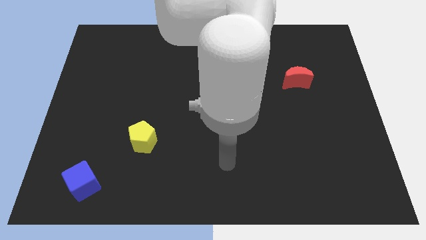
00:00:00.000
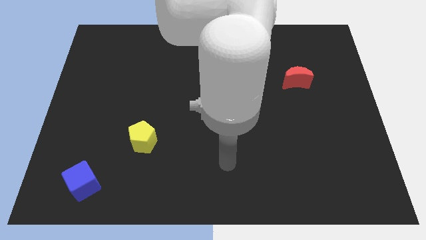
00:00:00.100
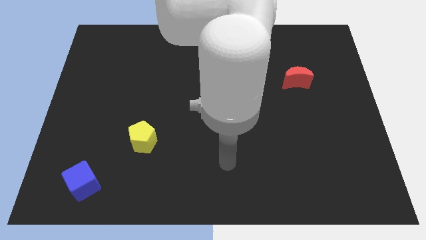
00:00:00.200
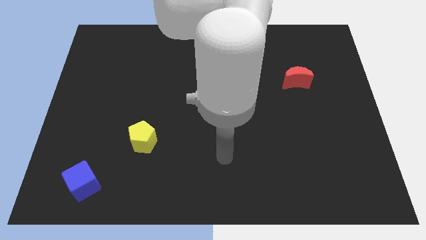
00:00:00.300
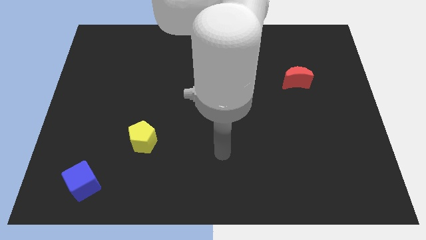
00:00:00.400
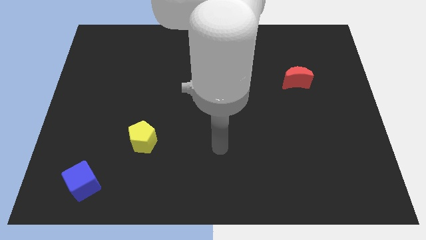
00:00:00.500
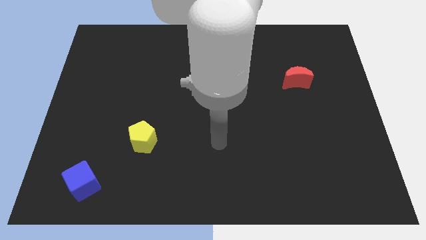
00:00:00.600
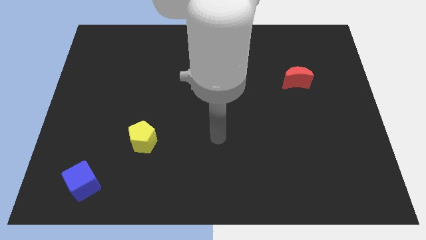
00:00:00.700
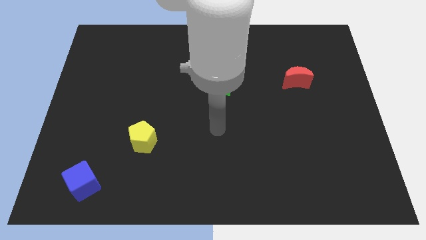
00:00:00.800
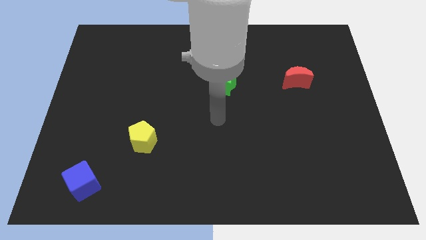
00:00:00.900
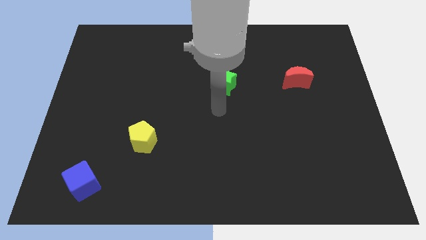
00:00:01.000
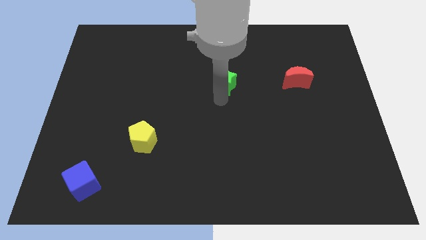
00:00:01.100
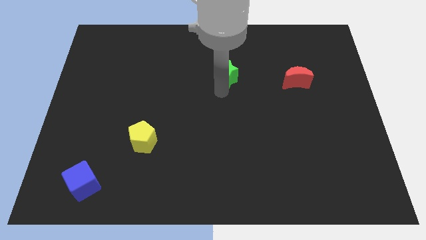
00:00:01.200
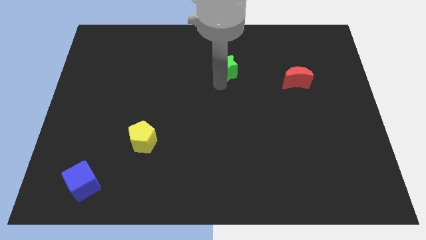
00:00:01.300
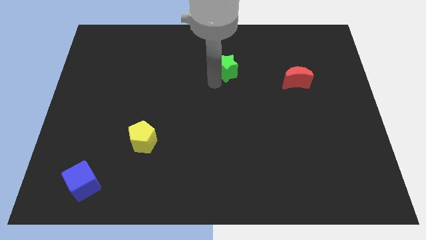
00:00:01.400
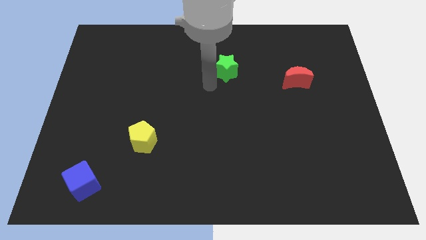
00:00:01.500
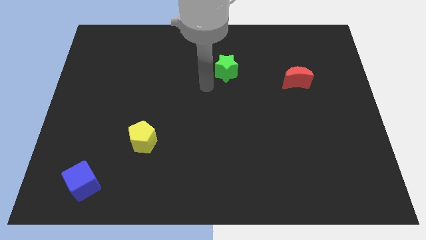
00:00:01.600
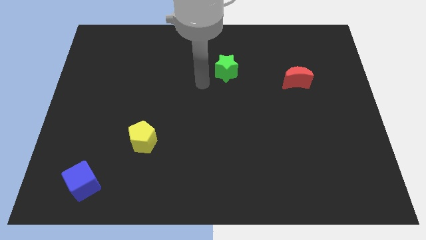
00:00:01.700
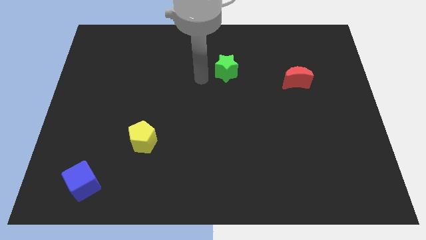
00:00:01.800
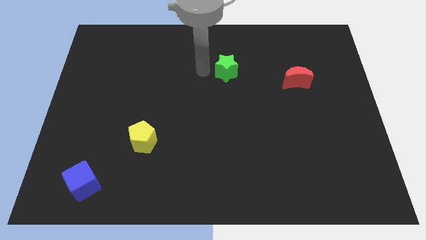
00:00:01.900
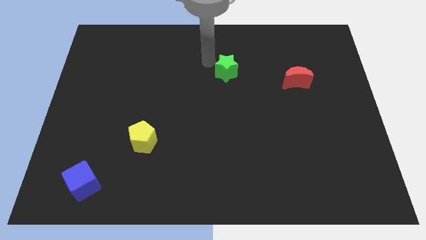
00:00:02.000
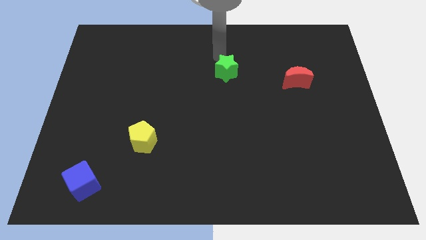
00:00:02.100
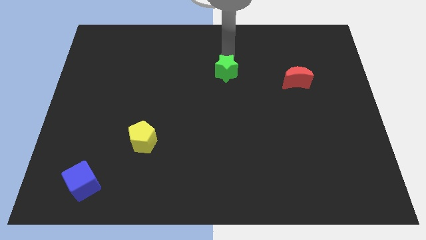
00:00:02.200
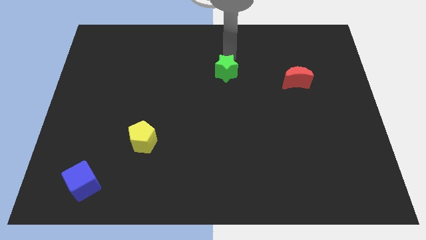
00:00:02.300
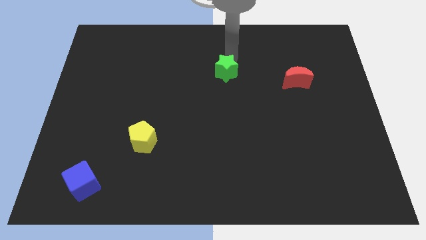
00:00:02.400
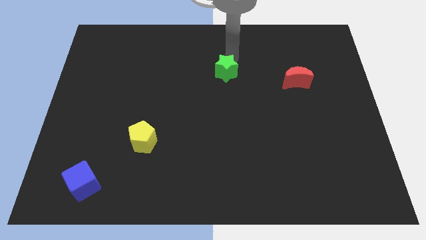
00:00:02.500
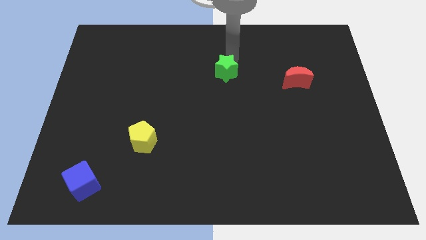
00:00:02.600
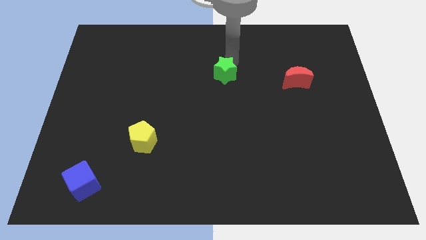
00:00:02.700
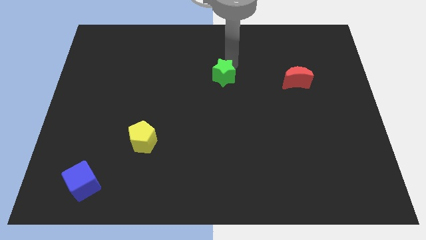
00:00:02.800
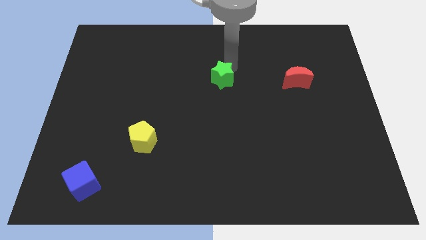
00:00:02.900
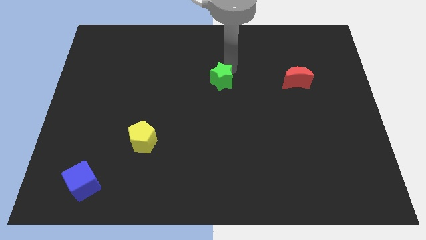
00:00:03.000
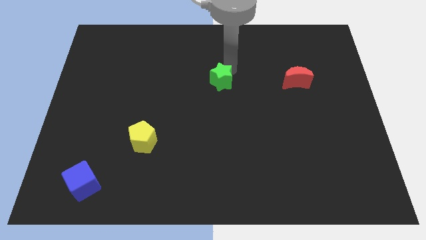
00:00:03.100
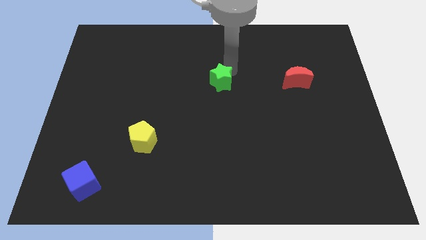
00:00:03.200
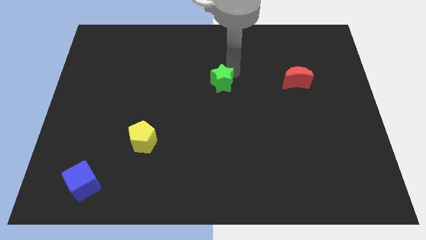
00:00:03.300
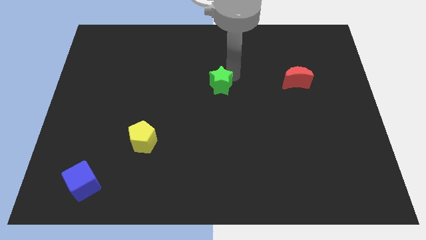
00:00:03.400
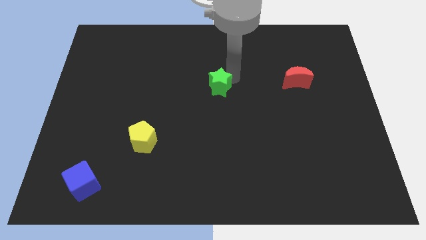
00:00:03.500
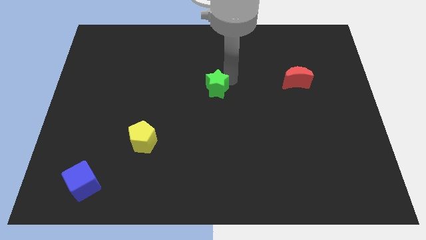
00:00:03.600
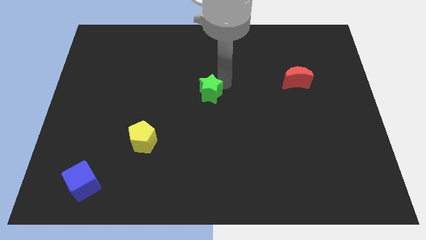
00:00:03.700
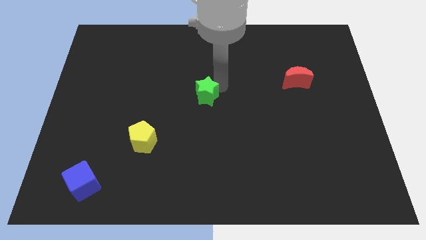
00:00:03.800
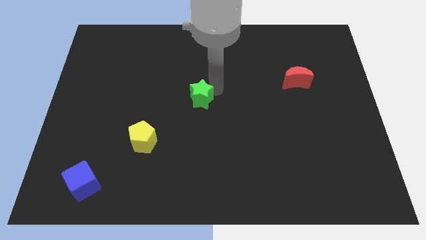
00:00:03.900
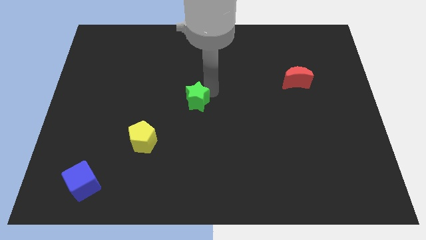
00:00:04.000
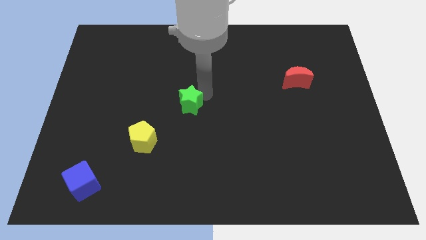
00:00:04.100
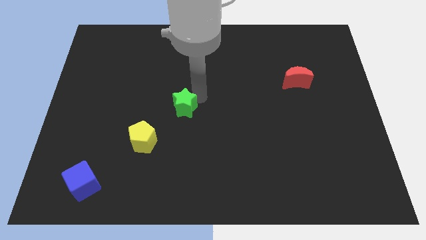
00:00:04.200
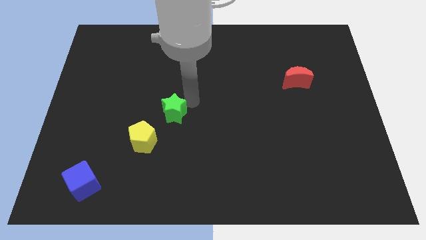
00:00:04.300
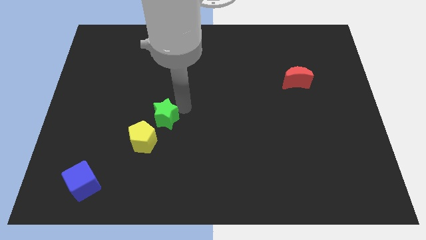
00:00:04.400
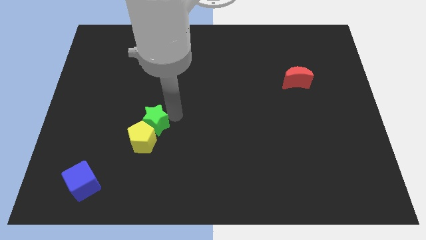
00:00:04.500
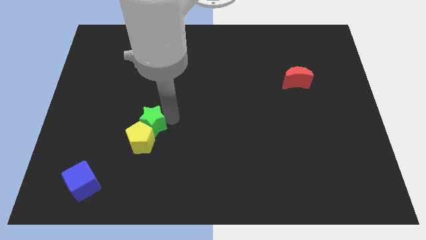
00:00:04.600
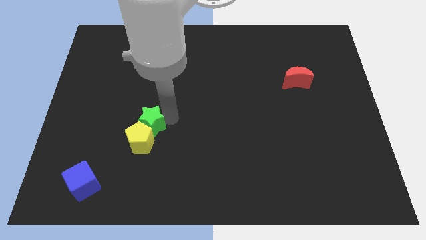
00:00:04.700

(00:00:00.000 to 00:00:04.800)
push the green star towards the yellow pentagon

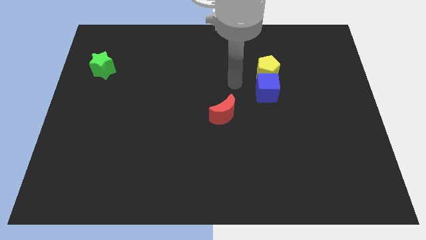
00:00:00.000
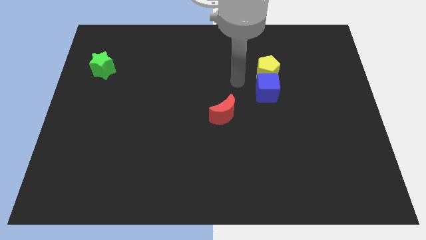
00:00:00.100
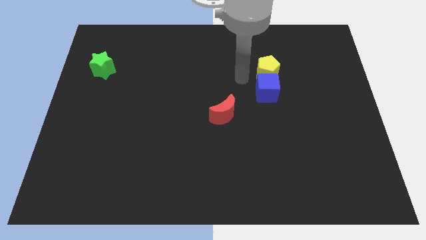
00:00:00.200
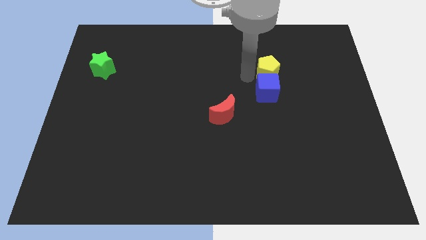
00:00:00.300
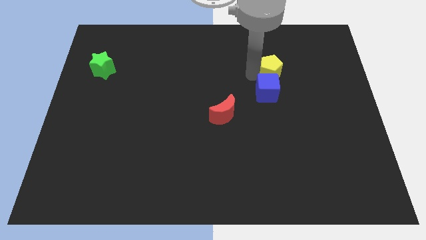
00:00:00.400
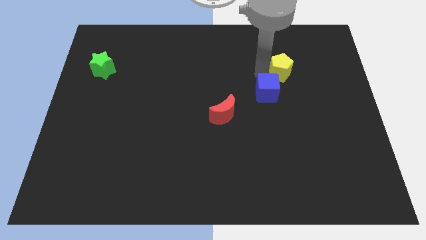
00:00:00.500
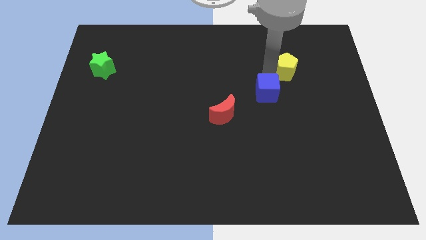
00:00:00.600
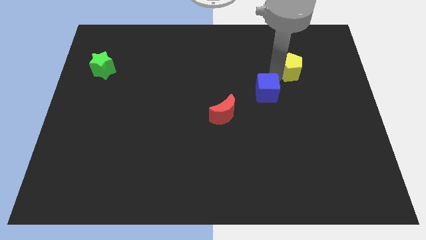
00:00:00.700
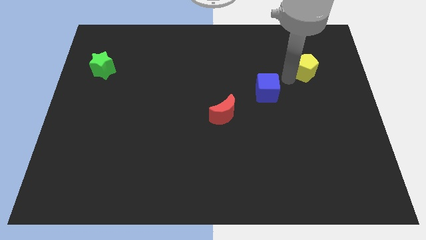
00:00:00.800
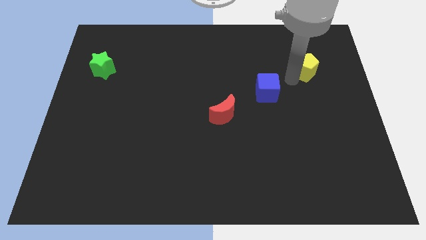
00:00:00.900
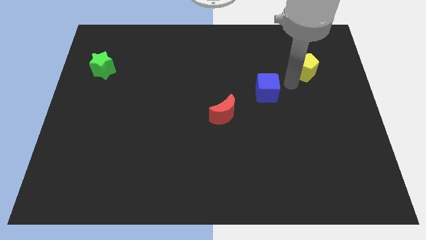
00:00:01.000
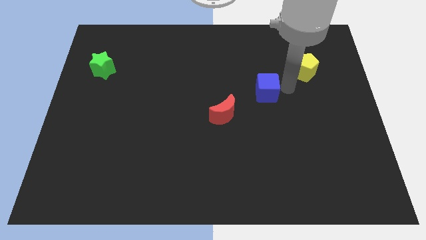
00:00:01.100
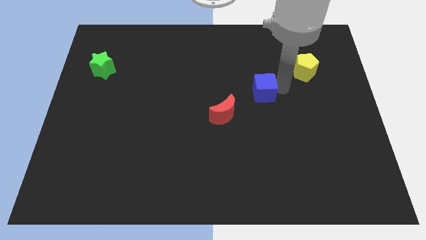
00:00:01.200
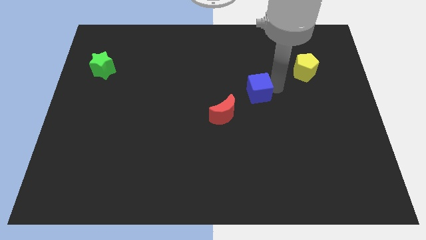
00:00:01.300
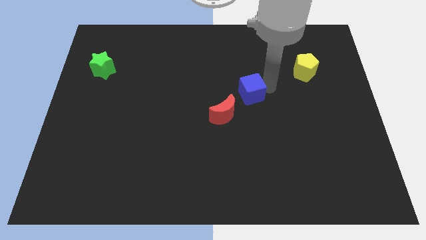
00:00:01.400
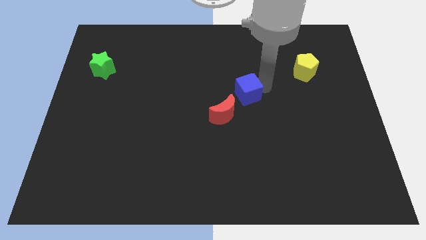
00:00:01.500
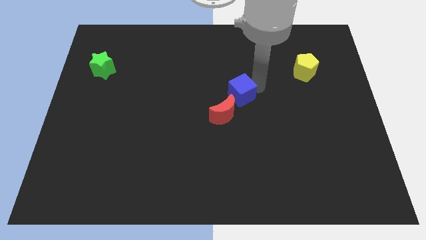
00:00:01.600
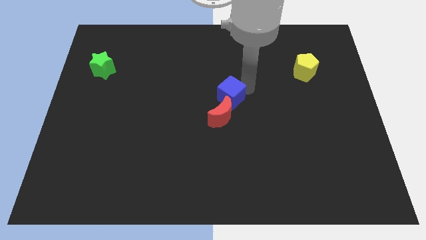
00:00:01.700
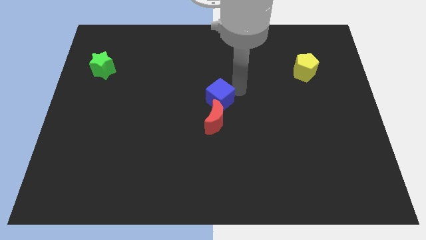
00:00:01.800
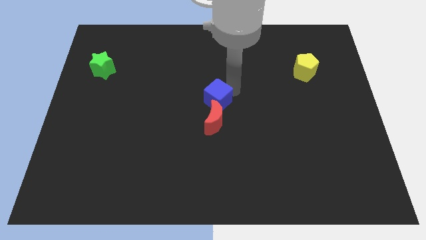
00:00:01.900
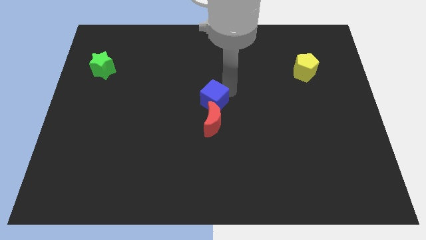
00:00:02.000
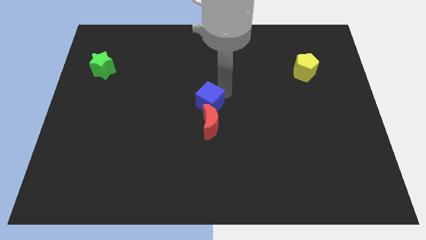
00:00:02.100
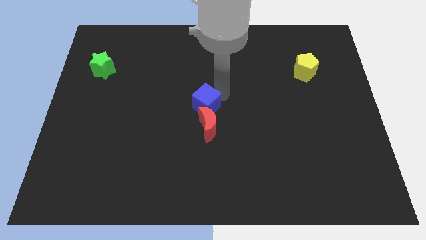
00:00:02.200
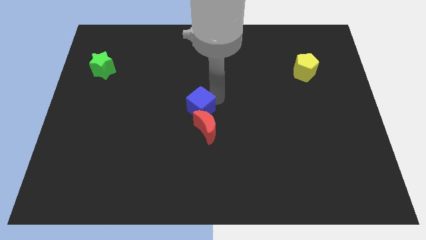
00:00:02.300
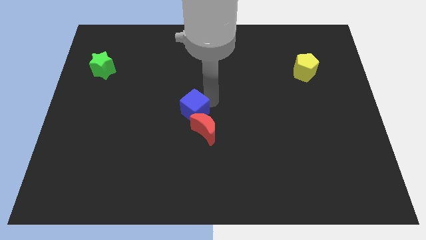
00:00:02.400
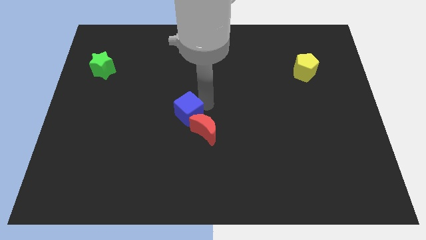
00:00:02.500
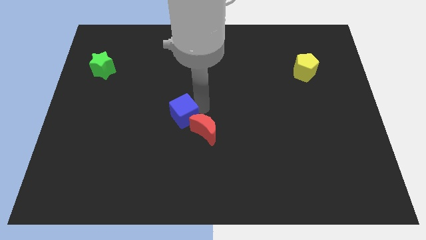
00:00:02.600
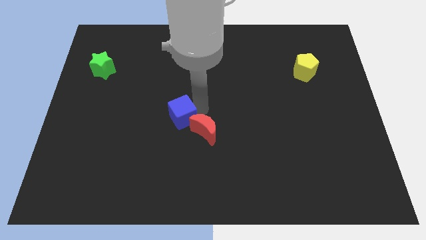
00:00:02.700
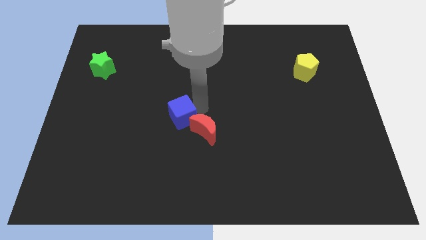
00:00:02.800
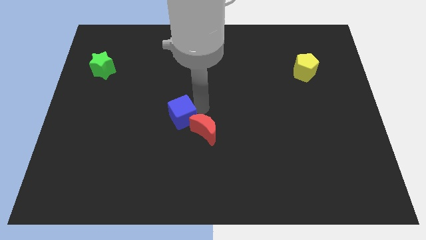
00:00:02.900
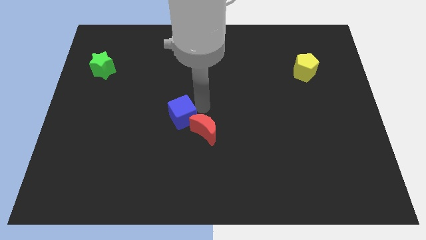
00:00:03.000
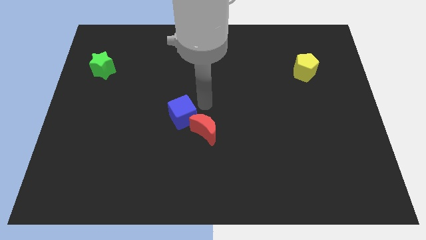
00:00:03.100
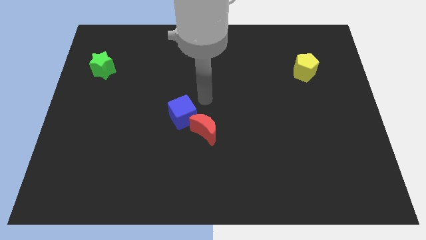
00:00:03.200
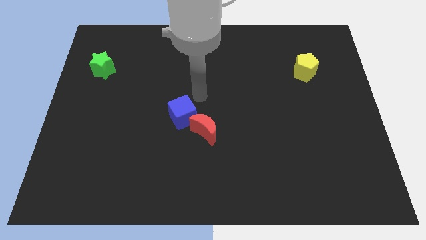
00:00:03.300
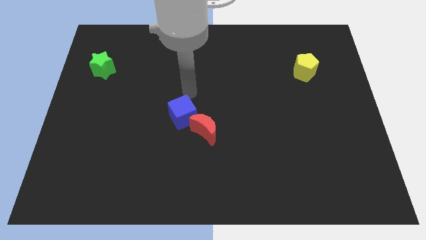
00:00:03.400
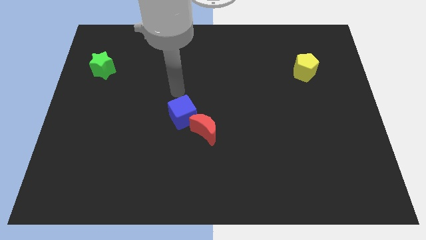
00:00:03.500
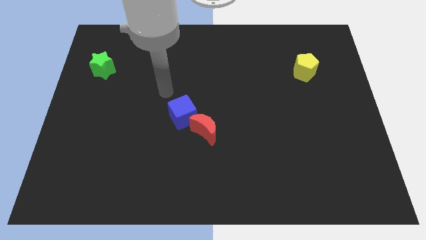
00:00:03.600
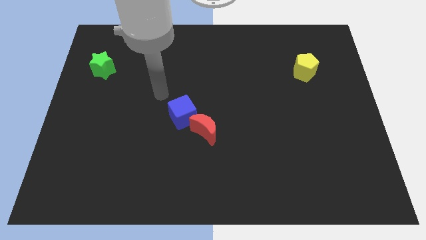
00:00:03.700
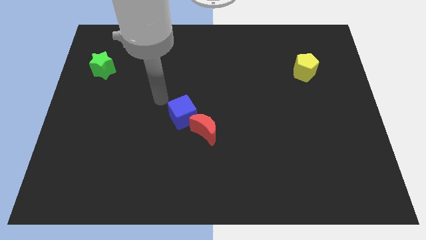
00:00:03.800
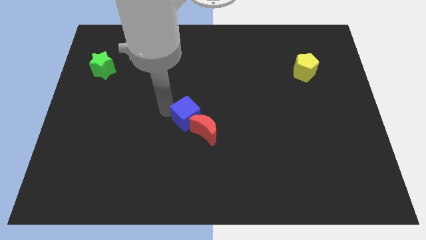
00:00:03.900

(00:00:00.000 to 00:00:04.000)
move the blue block to the red block
